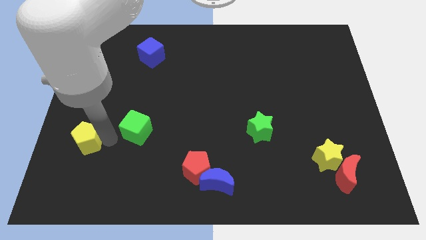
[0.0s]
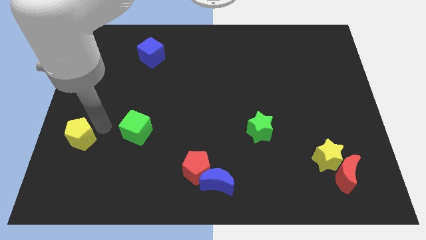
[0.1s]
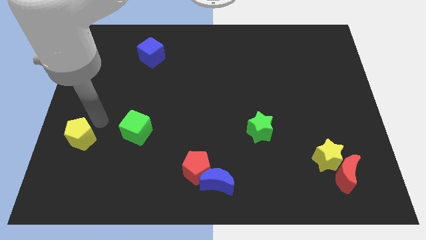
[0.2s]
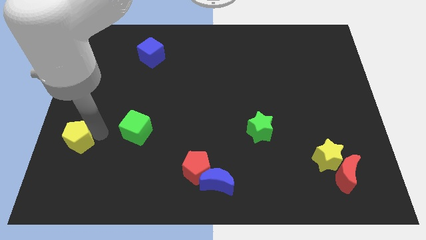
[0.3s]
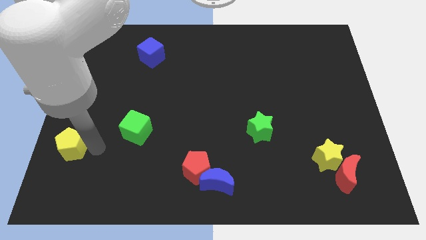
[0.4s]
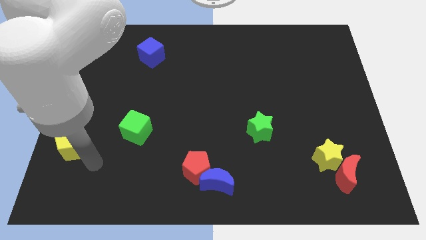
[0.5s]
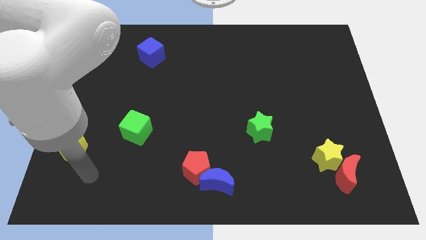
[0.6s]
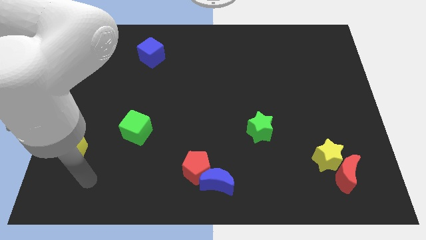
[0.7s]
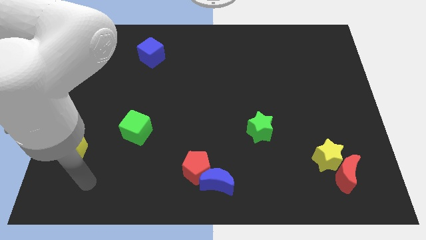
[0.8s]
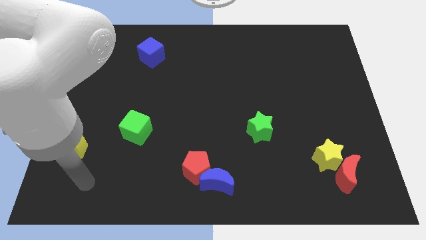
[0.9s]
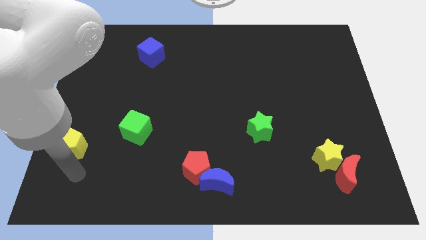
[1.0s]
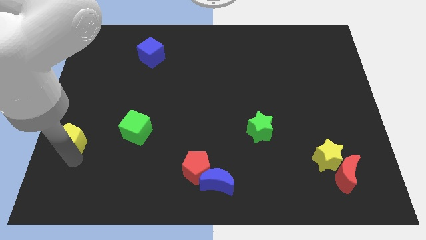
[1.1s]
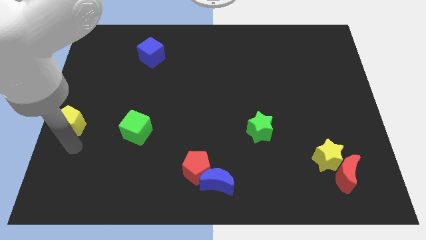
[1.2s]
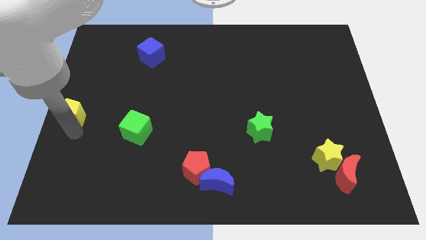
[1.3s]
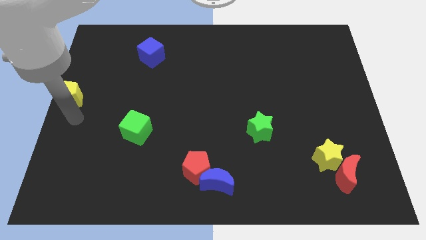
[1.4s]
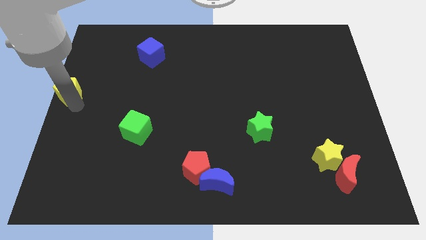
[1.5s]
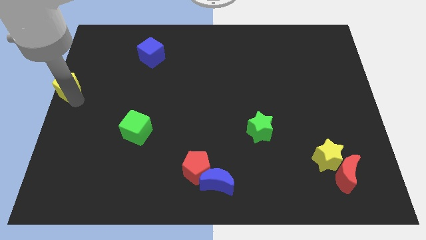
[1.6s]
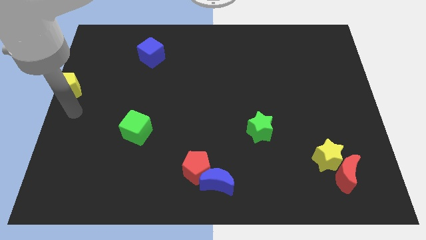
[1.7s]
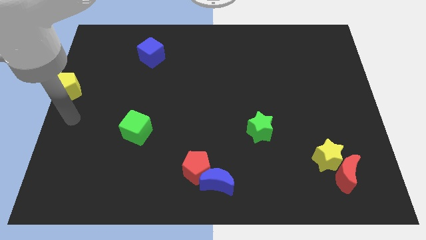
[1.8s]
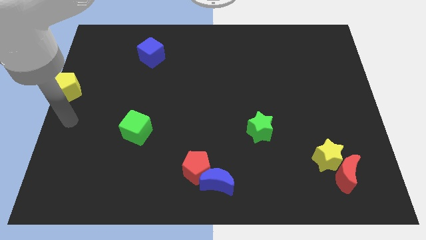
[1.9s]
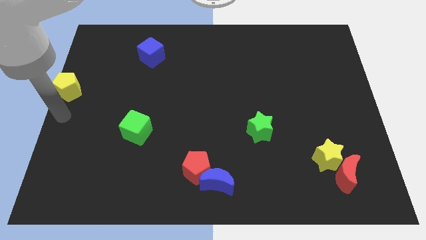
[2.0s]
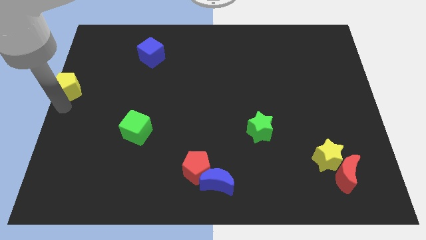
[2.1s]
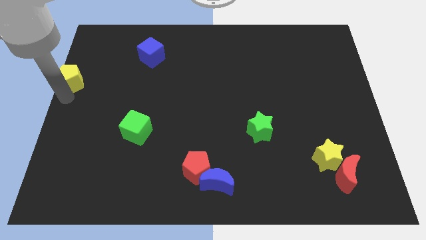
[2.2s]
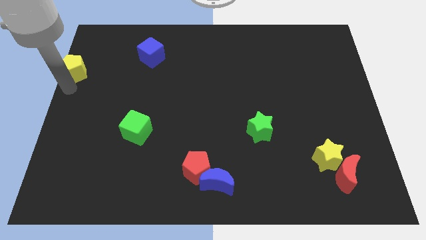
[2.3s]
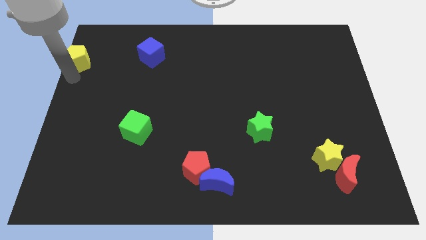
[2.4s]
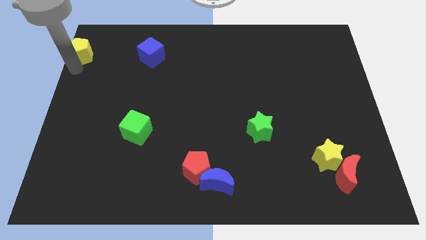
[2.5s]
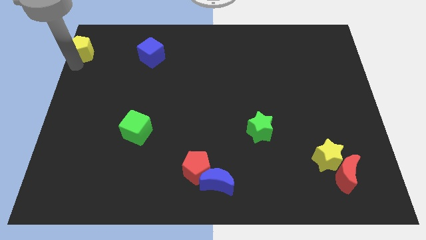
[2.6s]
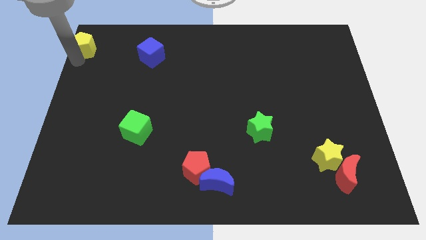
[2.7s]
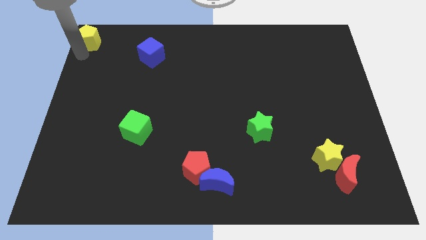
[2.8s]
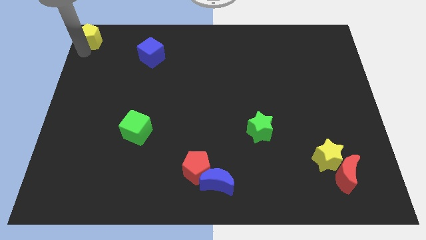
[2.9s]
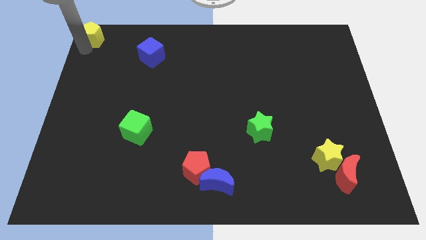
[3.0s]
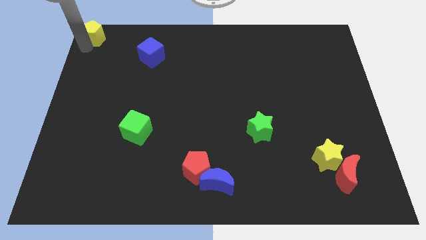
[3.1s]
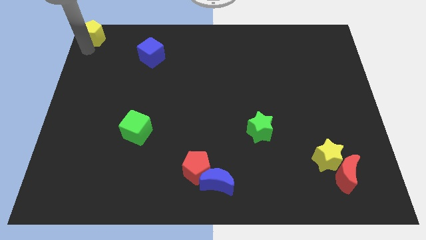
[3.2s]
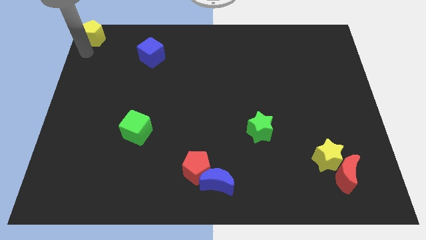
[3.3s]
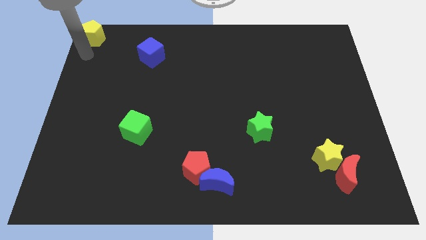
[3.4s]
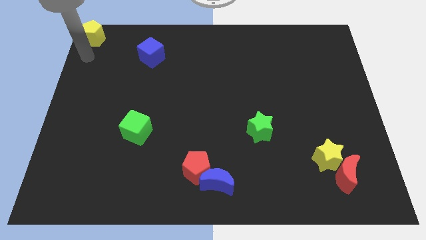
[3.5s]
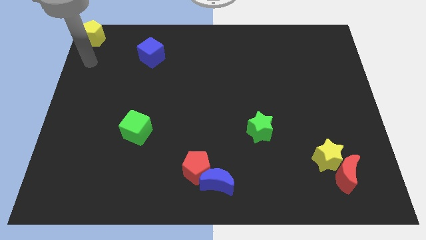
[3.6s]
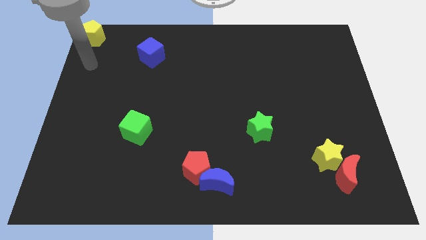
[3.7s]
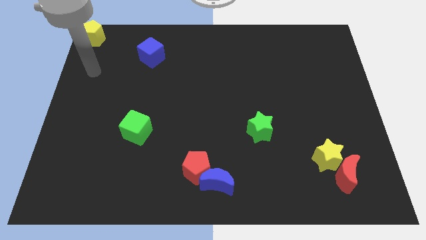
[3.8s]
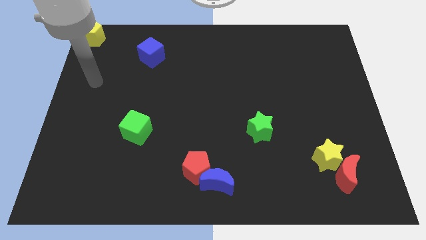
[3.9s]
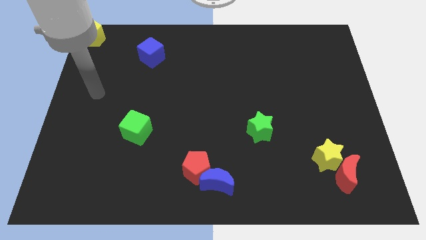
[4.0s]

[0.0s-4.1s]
slide yellow pentagon in the top left

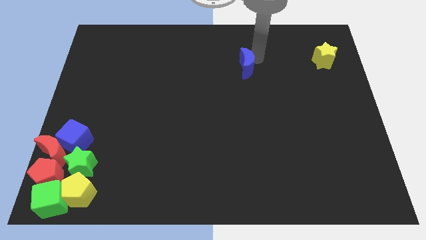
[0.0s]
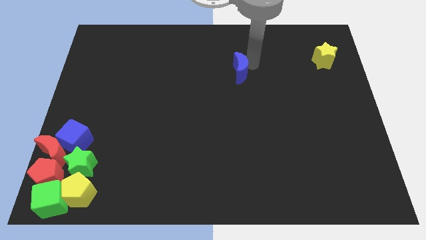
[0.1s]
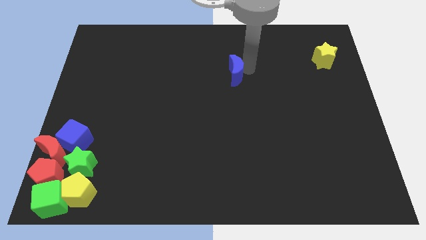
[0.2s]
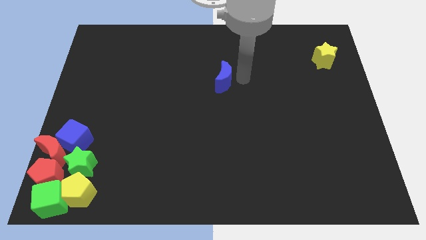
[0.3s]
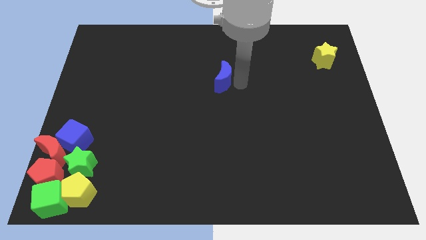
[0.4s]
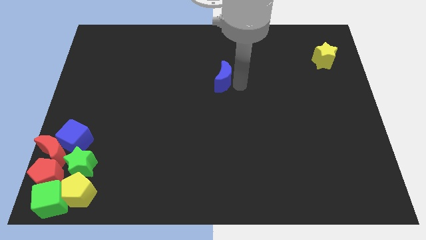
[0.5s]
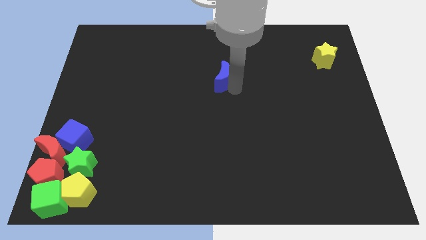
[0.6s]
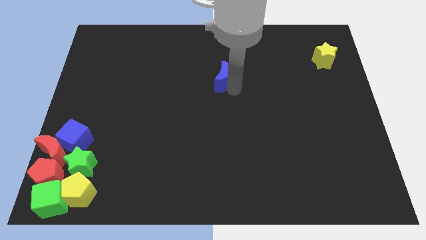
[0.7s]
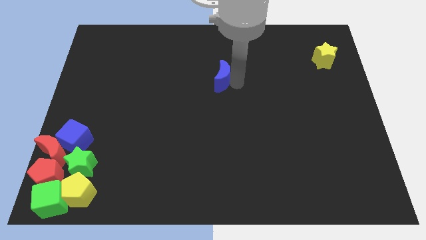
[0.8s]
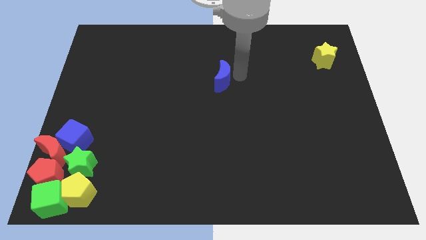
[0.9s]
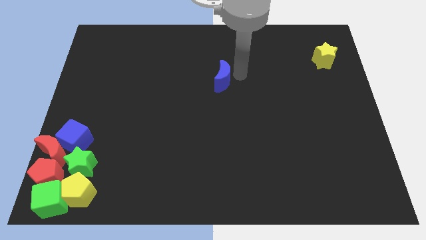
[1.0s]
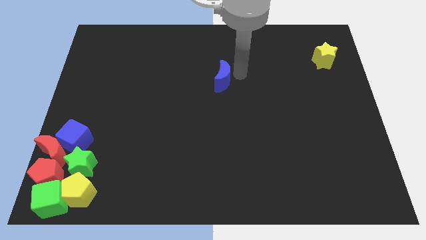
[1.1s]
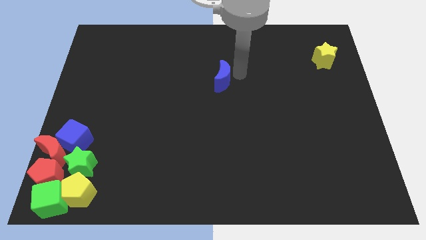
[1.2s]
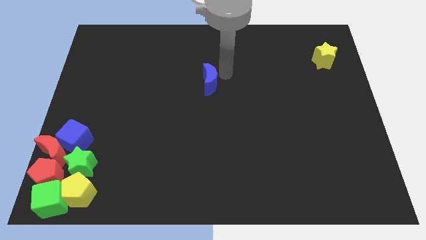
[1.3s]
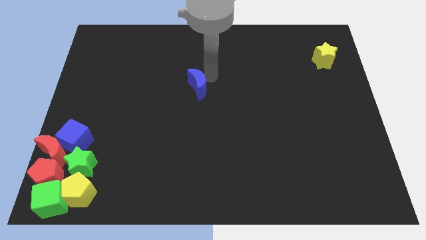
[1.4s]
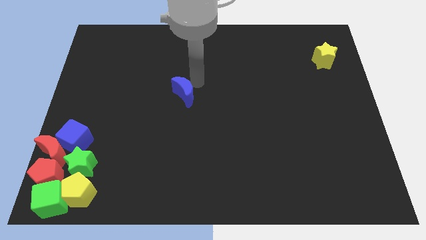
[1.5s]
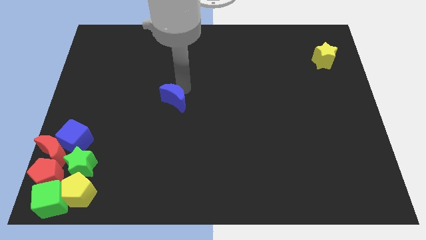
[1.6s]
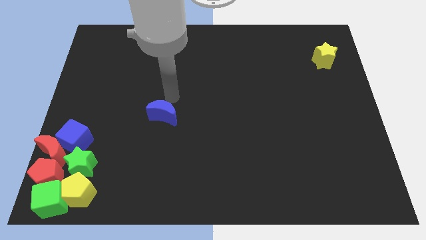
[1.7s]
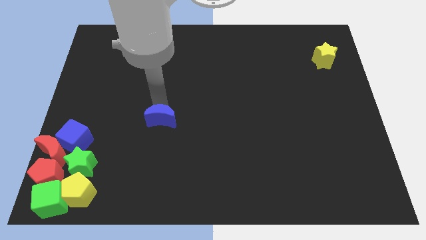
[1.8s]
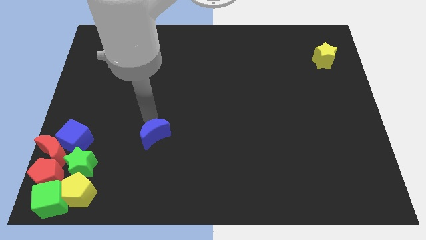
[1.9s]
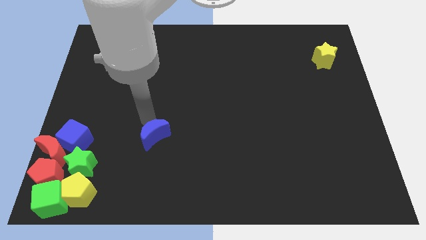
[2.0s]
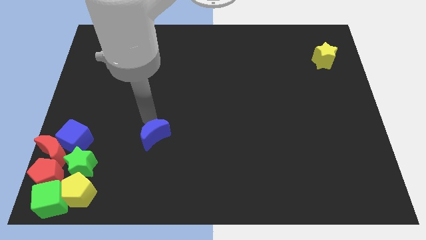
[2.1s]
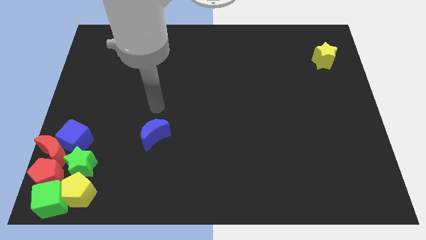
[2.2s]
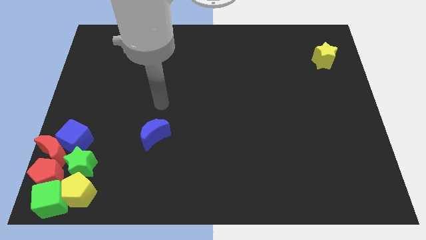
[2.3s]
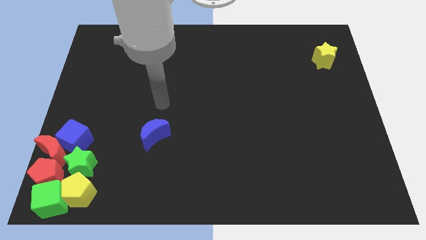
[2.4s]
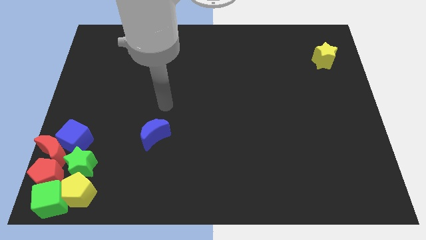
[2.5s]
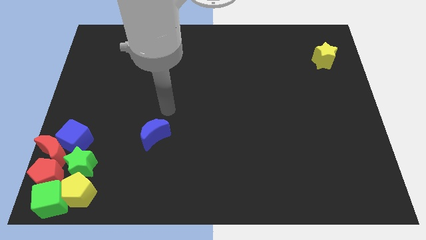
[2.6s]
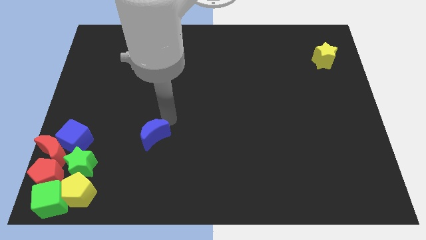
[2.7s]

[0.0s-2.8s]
push the blue crescent towards the group of blocks

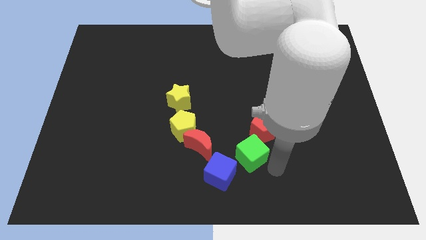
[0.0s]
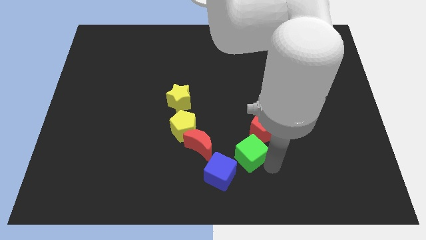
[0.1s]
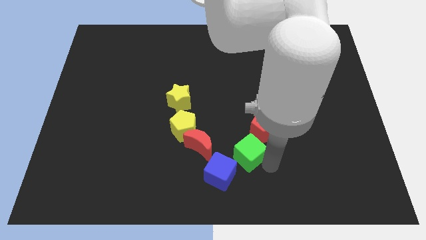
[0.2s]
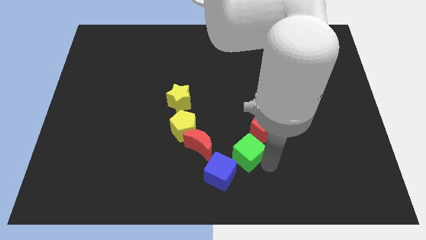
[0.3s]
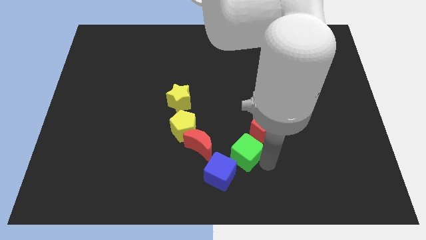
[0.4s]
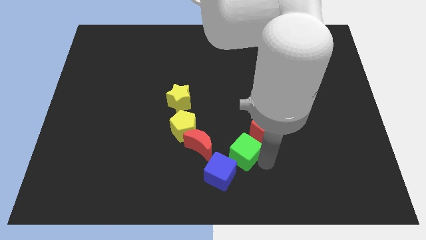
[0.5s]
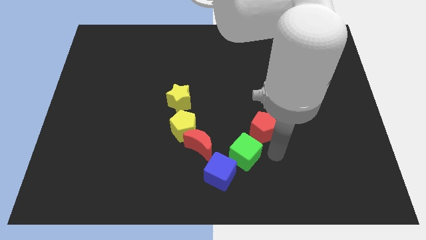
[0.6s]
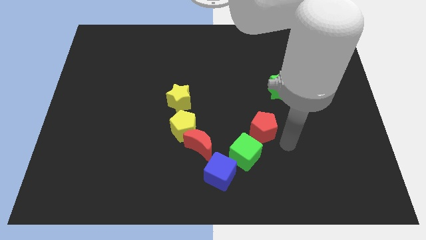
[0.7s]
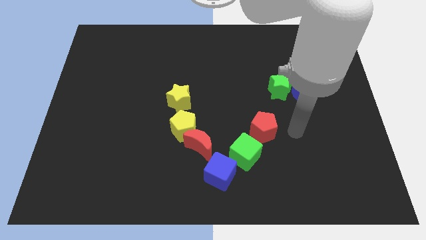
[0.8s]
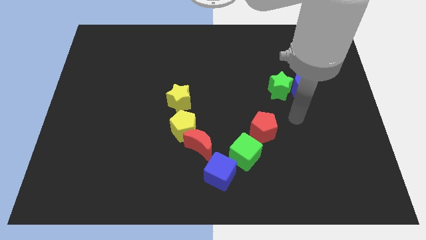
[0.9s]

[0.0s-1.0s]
slightly push the green cube below the red pentagon

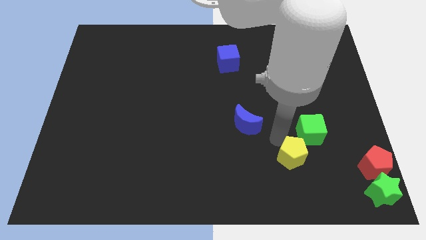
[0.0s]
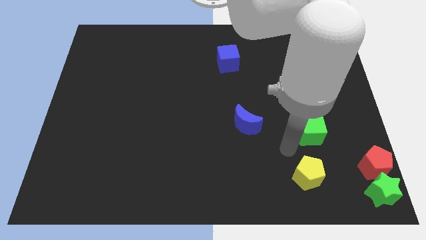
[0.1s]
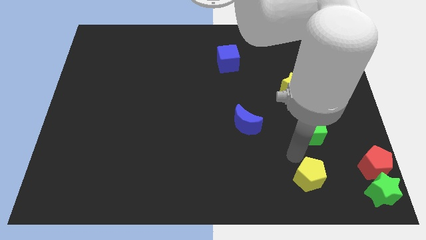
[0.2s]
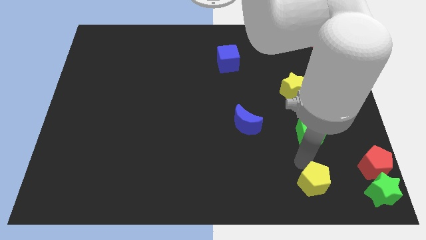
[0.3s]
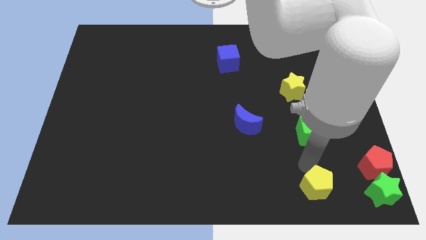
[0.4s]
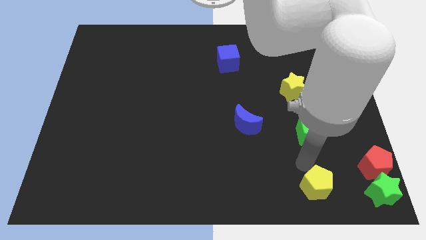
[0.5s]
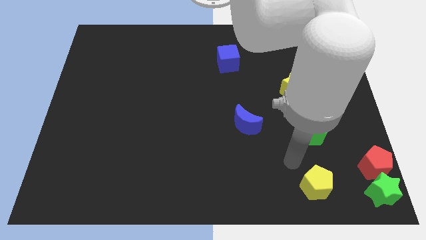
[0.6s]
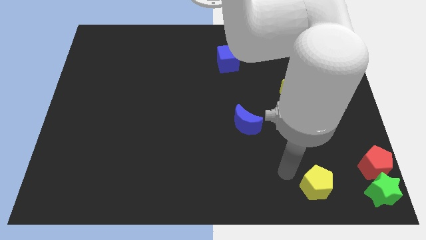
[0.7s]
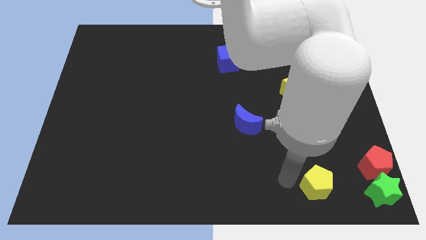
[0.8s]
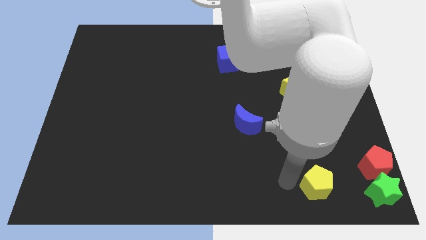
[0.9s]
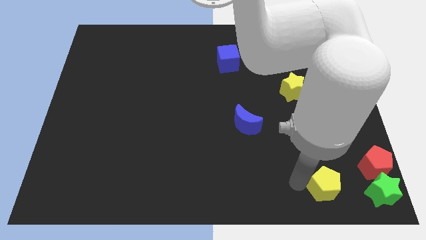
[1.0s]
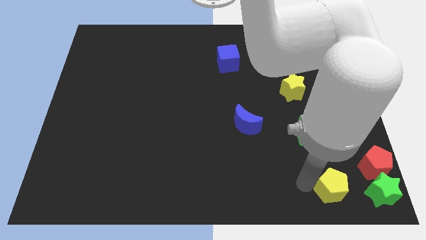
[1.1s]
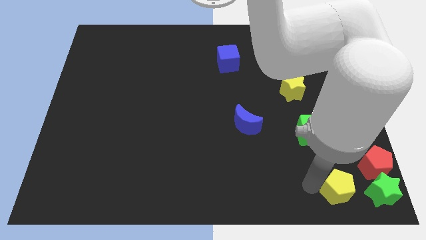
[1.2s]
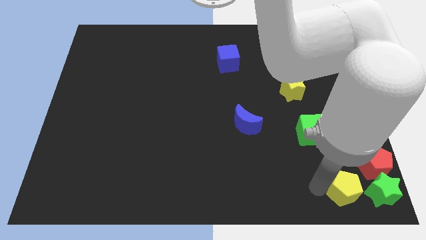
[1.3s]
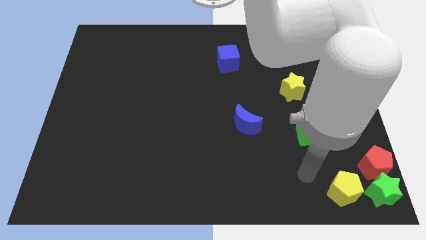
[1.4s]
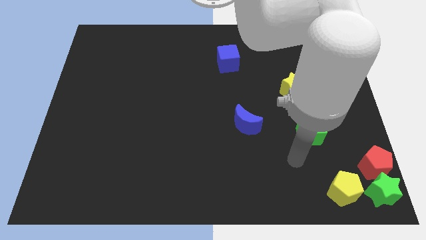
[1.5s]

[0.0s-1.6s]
push the yellow pentagon to the left of the green star
